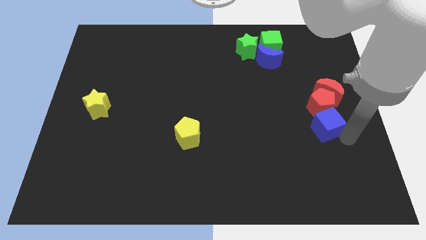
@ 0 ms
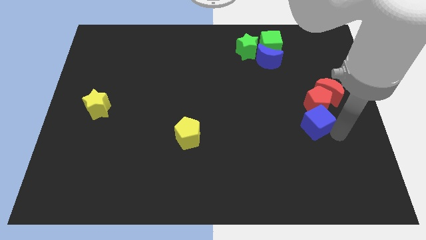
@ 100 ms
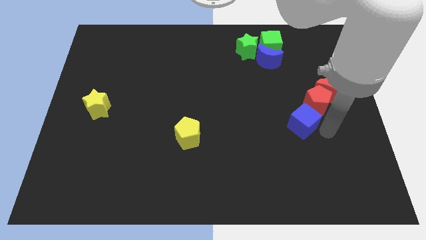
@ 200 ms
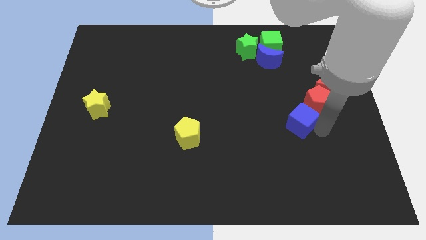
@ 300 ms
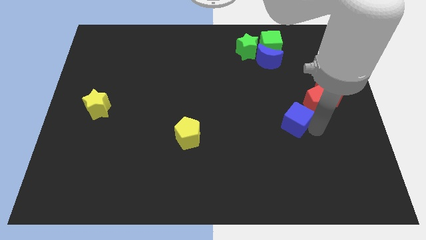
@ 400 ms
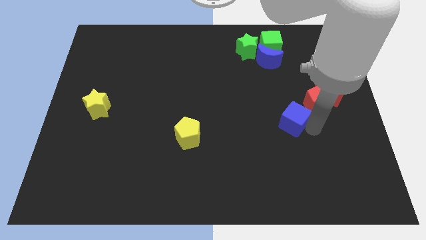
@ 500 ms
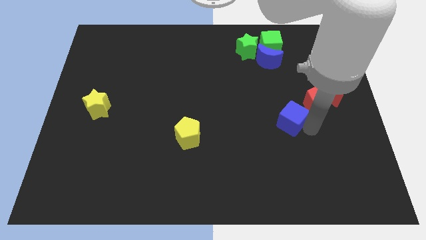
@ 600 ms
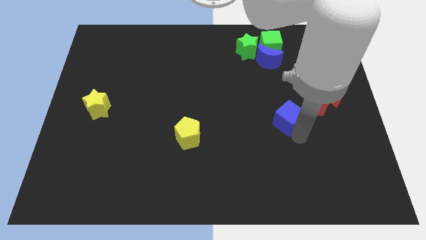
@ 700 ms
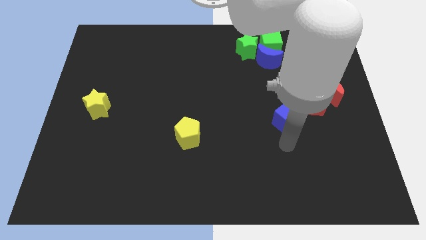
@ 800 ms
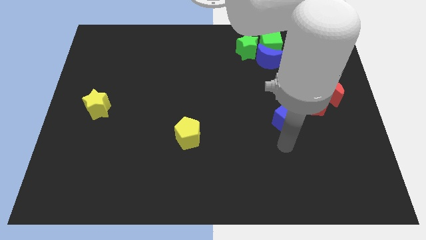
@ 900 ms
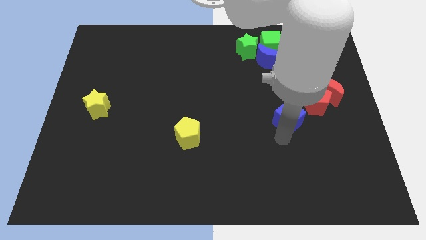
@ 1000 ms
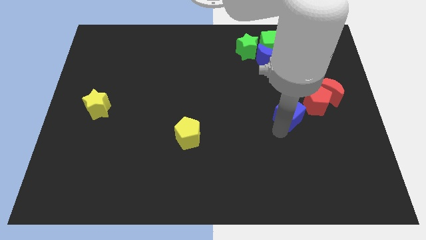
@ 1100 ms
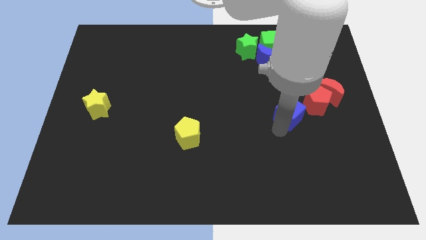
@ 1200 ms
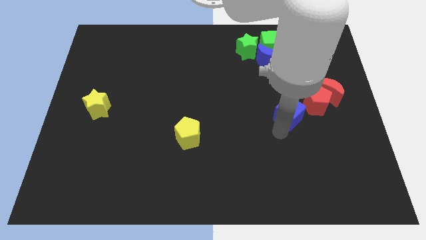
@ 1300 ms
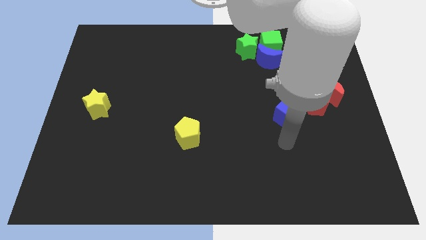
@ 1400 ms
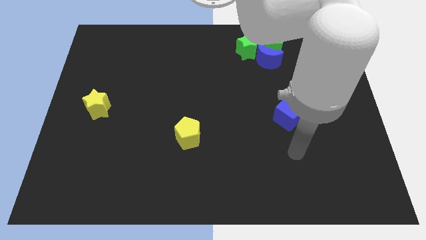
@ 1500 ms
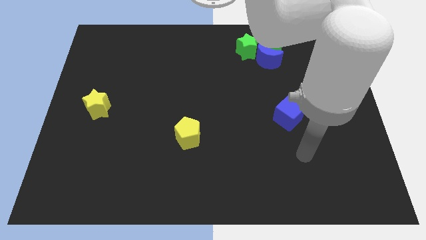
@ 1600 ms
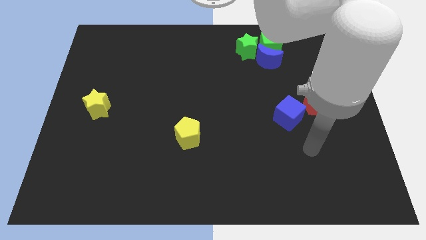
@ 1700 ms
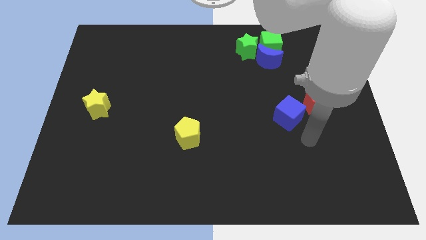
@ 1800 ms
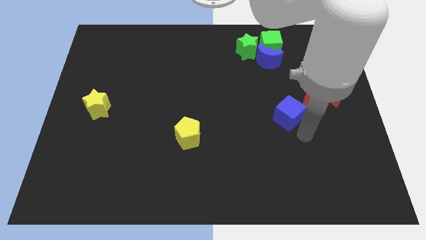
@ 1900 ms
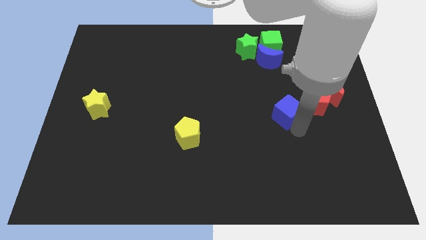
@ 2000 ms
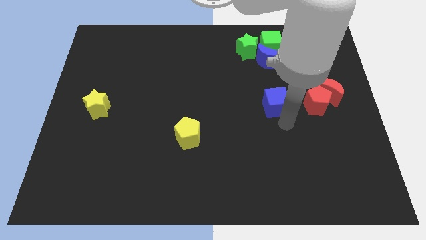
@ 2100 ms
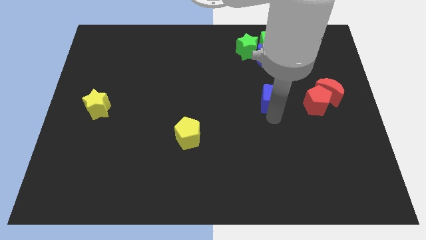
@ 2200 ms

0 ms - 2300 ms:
place the blue cube to the left of the red pentagon

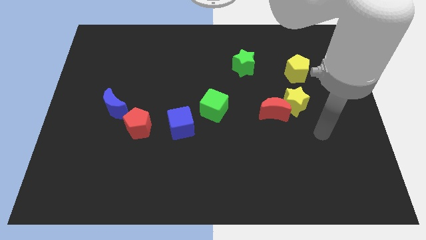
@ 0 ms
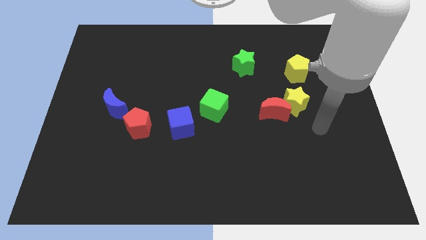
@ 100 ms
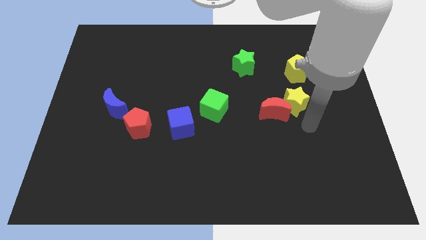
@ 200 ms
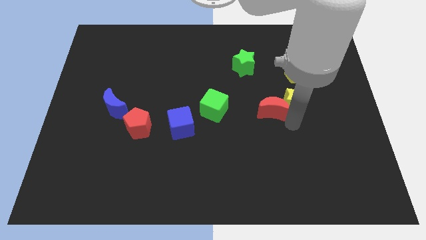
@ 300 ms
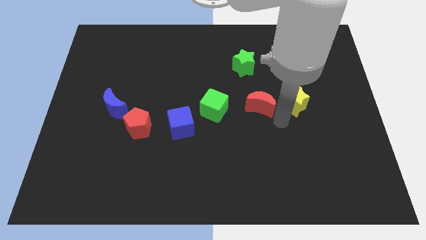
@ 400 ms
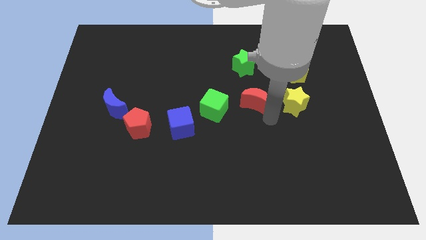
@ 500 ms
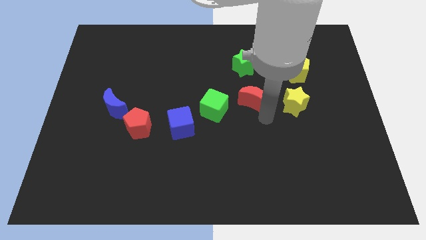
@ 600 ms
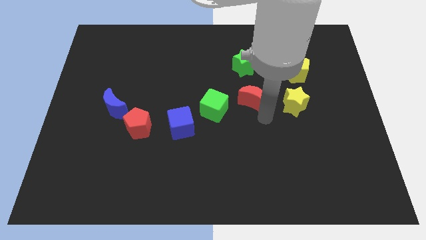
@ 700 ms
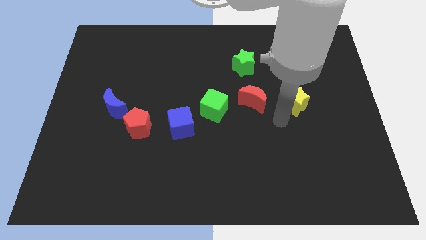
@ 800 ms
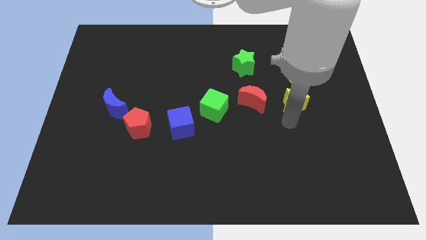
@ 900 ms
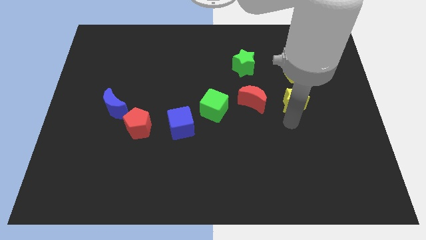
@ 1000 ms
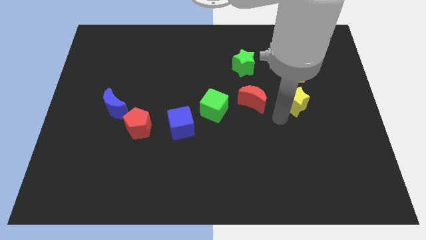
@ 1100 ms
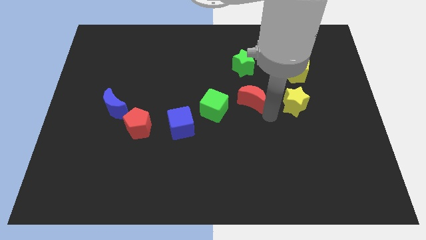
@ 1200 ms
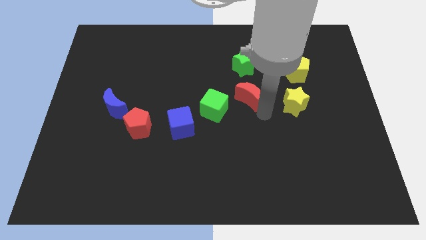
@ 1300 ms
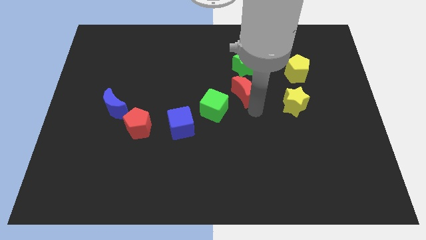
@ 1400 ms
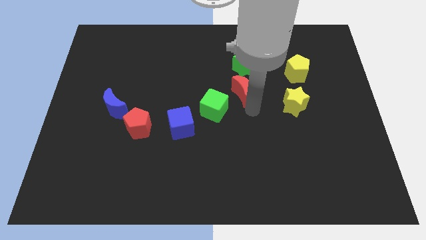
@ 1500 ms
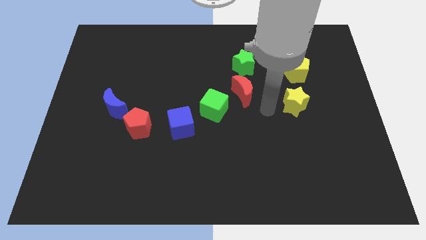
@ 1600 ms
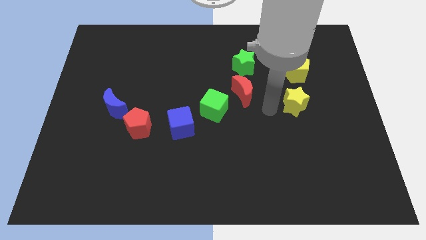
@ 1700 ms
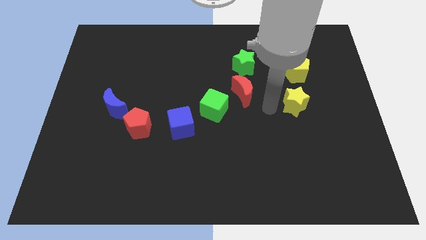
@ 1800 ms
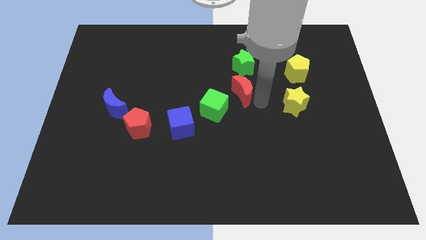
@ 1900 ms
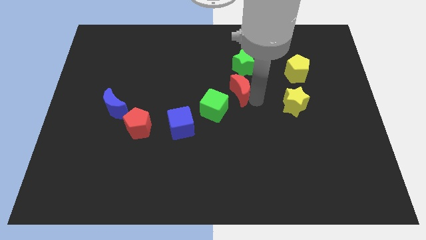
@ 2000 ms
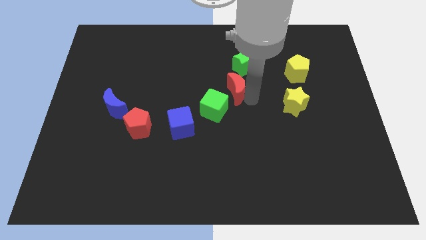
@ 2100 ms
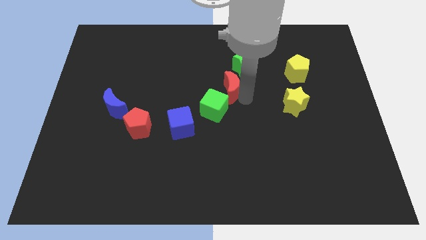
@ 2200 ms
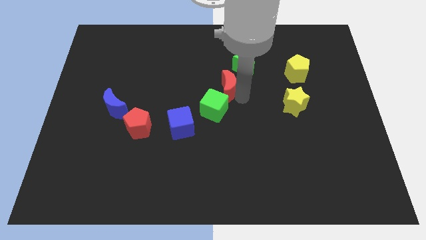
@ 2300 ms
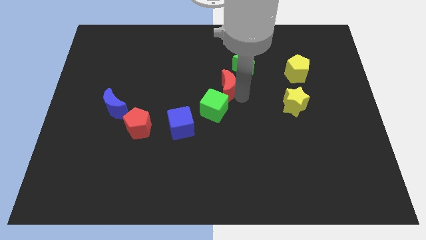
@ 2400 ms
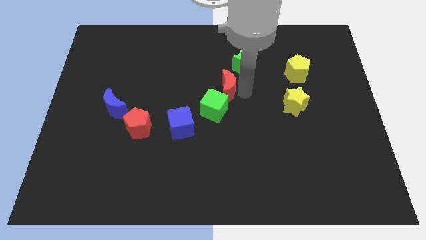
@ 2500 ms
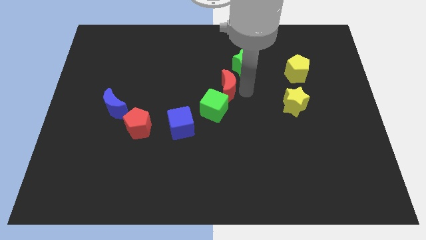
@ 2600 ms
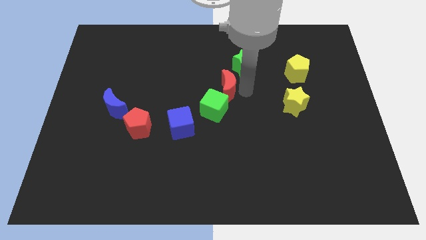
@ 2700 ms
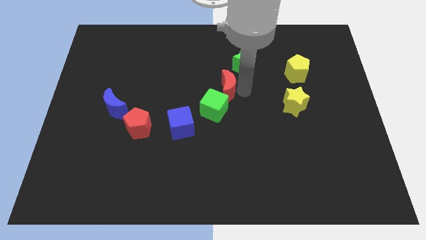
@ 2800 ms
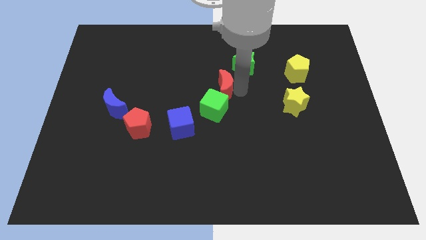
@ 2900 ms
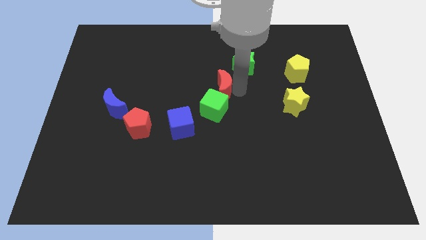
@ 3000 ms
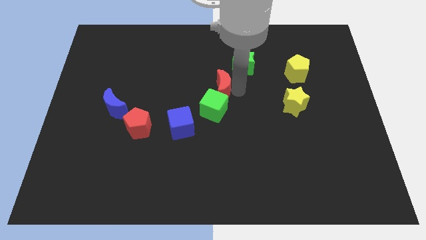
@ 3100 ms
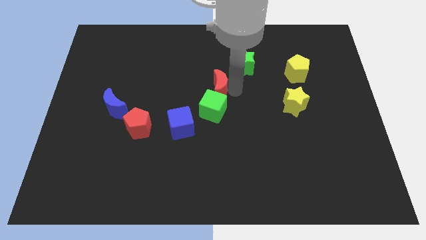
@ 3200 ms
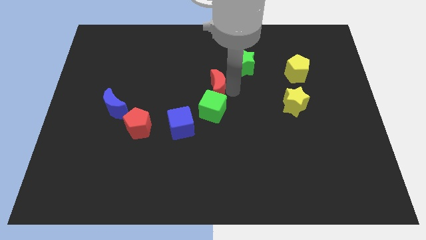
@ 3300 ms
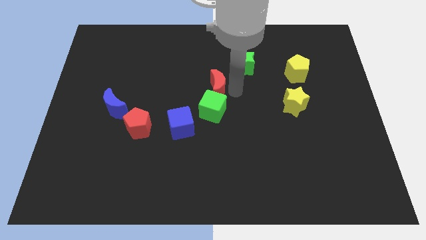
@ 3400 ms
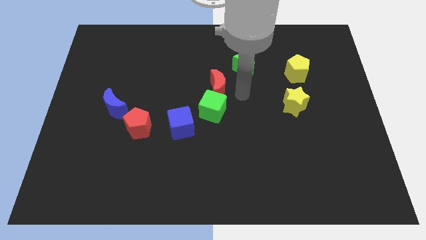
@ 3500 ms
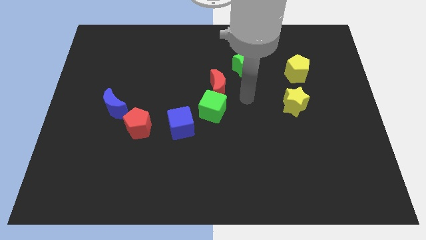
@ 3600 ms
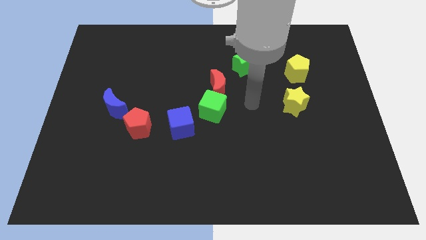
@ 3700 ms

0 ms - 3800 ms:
place the red crescent top of green cube

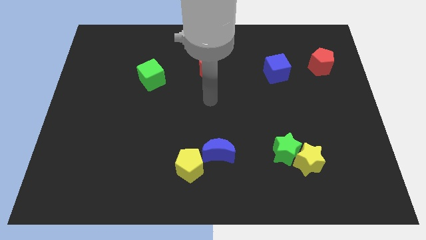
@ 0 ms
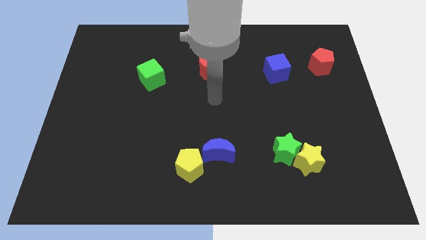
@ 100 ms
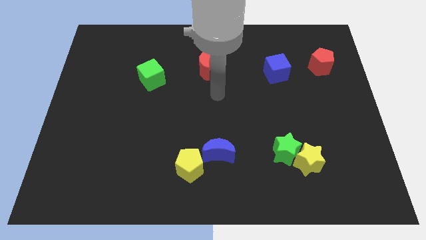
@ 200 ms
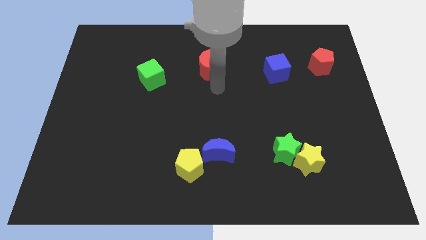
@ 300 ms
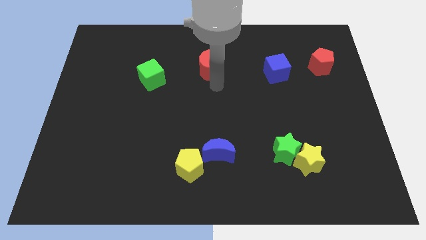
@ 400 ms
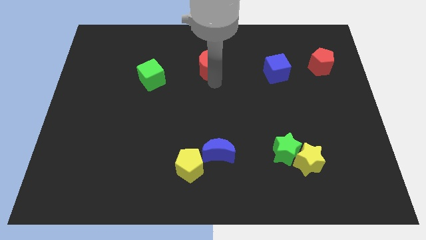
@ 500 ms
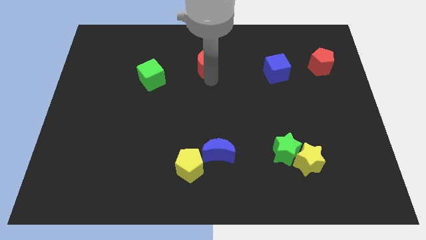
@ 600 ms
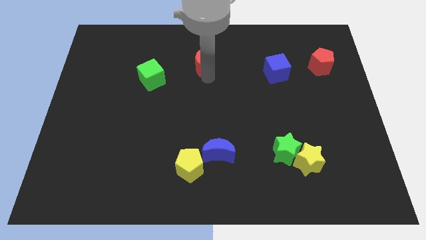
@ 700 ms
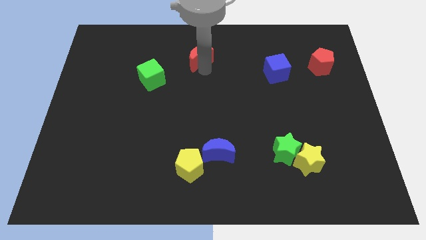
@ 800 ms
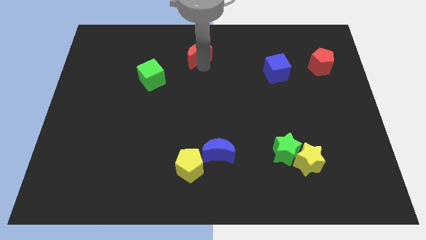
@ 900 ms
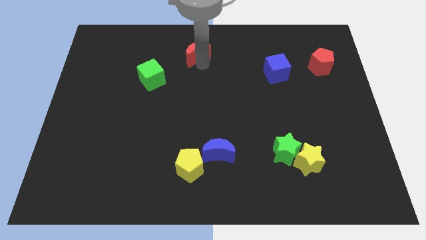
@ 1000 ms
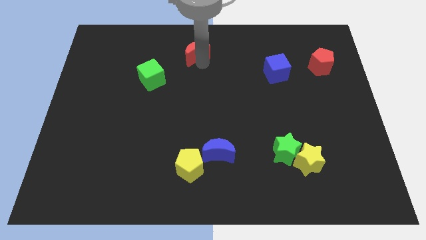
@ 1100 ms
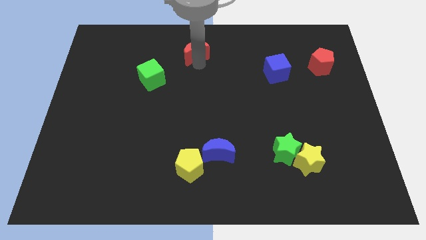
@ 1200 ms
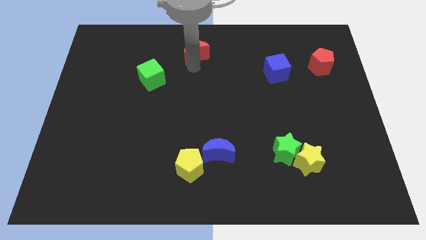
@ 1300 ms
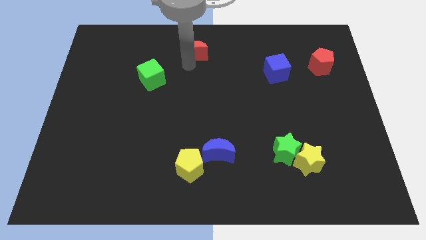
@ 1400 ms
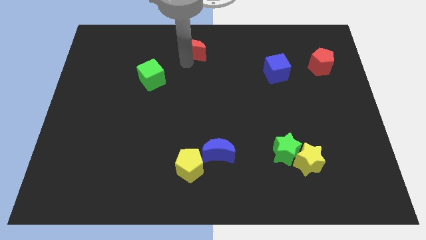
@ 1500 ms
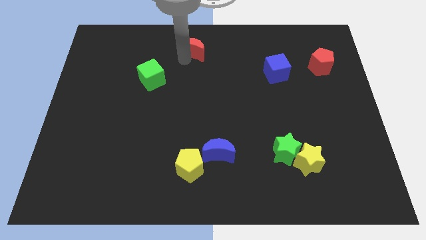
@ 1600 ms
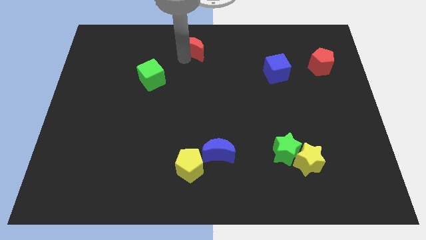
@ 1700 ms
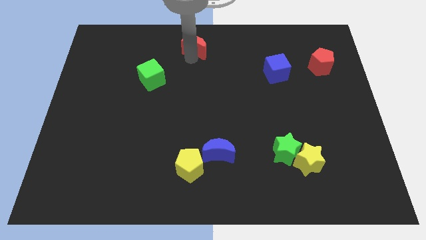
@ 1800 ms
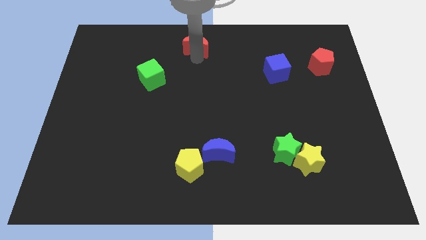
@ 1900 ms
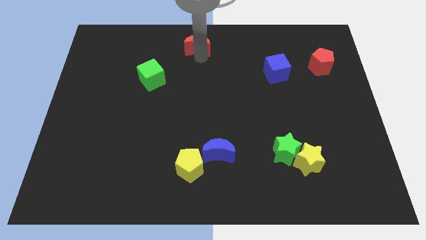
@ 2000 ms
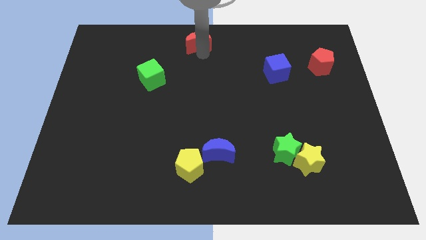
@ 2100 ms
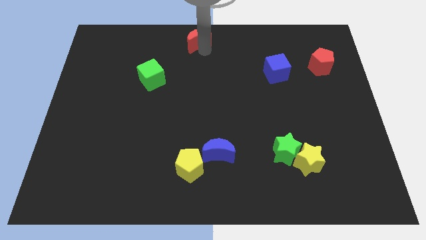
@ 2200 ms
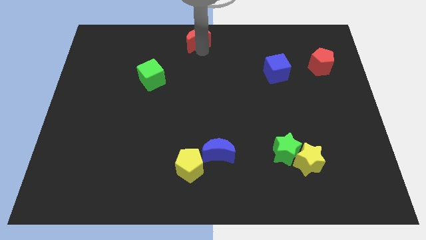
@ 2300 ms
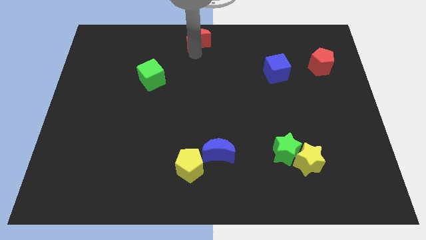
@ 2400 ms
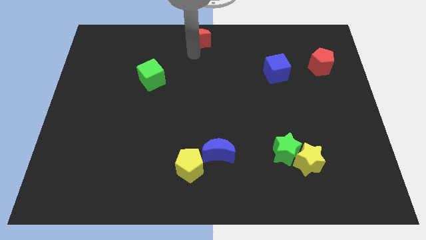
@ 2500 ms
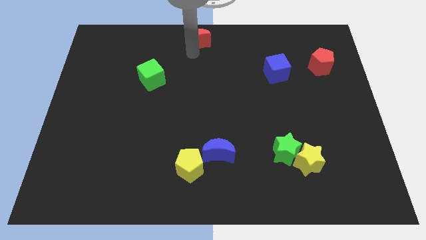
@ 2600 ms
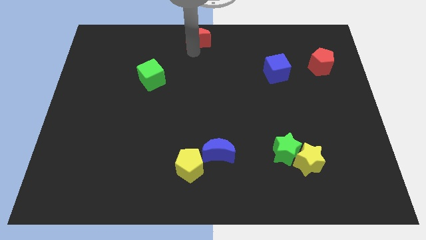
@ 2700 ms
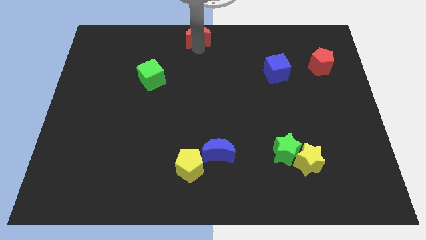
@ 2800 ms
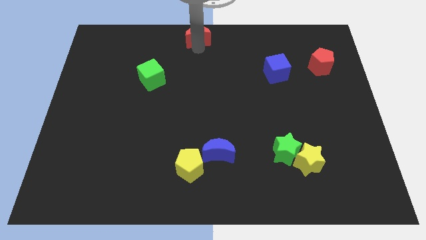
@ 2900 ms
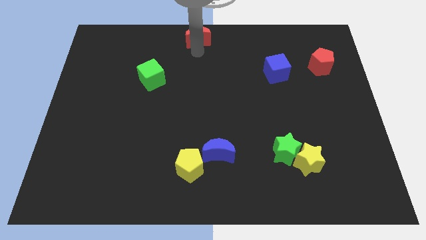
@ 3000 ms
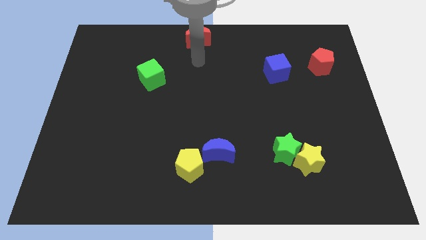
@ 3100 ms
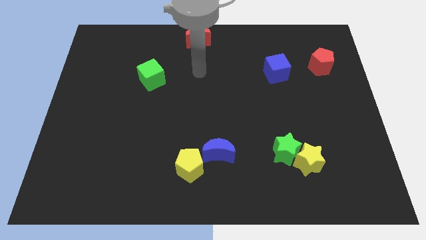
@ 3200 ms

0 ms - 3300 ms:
place red moon at the center top
